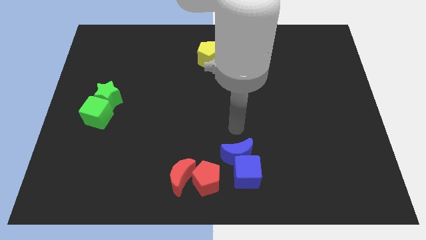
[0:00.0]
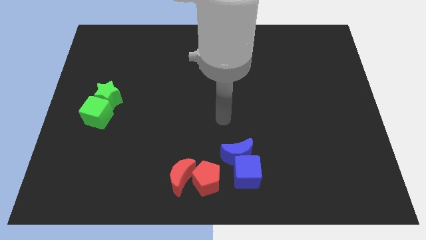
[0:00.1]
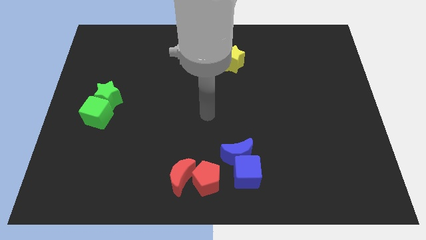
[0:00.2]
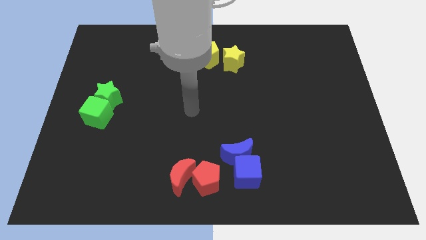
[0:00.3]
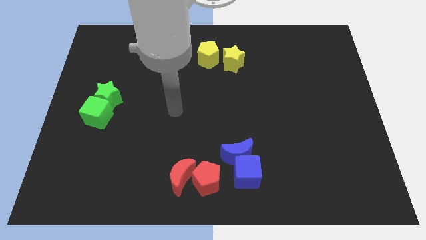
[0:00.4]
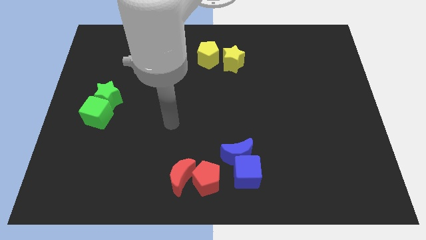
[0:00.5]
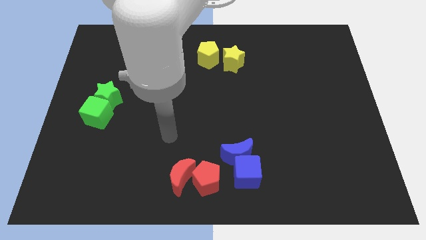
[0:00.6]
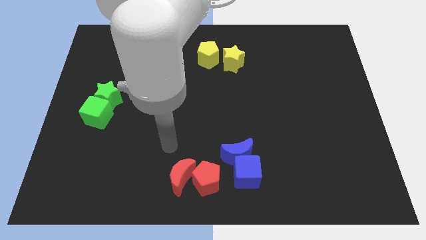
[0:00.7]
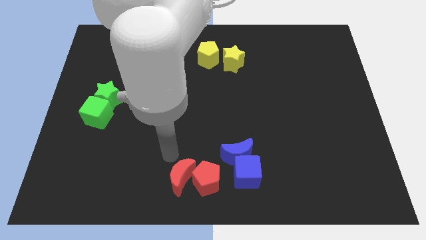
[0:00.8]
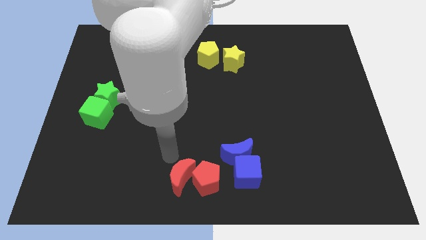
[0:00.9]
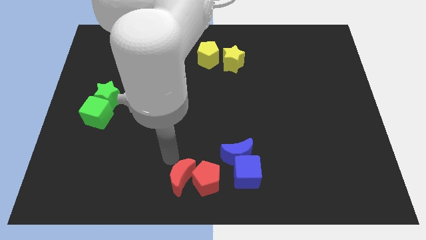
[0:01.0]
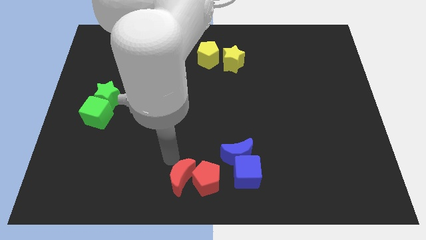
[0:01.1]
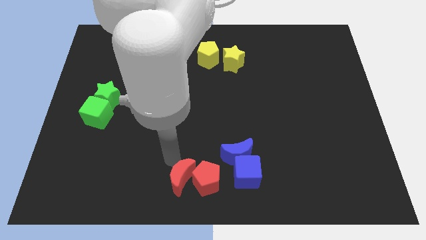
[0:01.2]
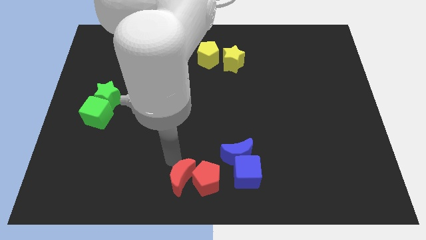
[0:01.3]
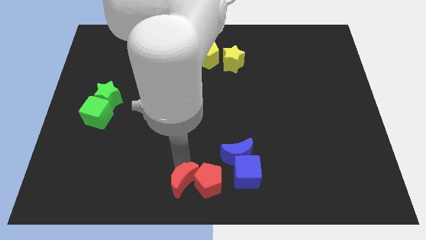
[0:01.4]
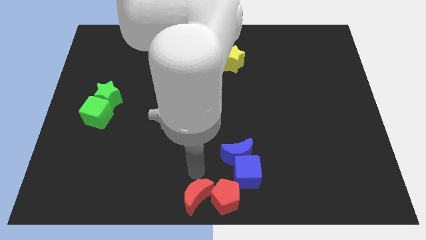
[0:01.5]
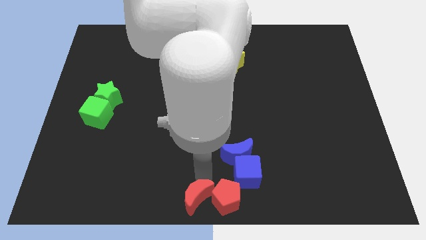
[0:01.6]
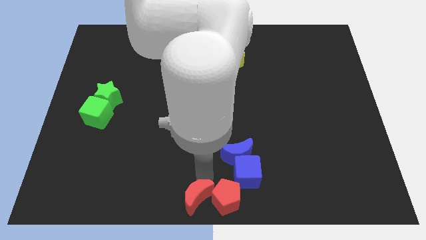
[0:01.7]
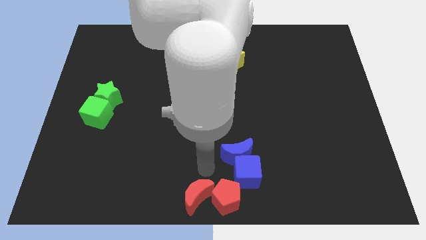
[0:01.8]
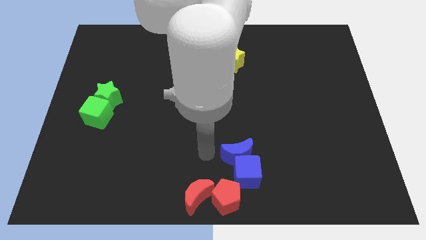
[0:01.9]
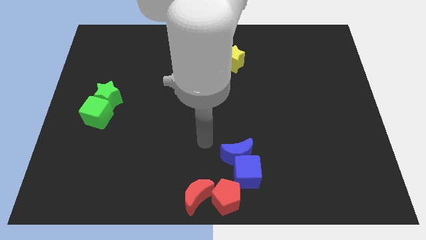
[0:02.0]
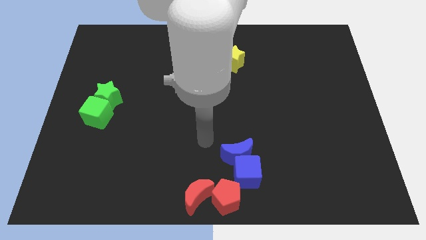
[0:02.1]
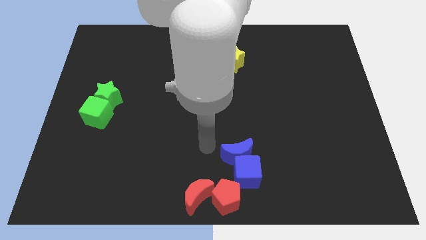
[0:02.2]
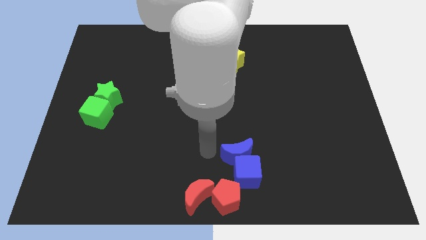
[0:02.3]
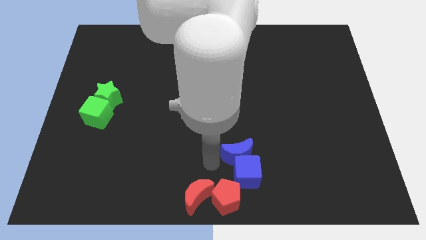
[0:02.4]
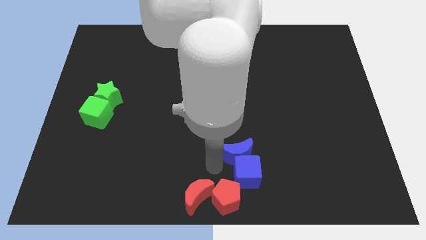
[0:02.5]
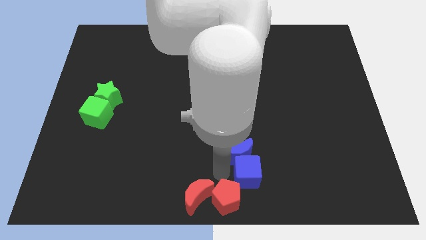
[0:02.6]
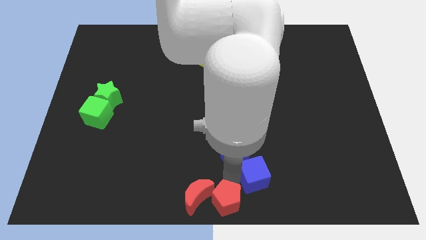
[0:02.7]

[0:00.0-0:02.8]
push red moon red pentagon to the bottom center

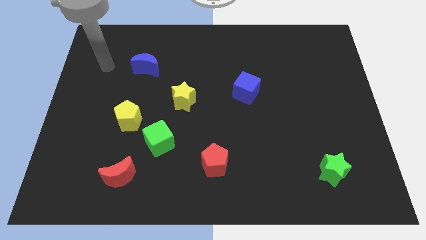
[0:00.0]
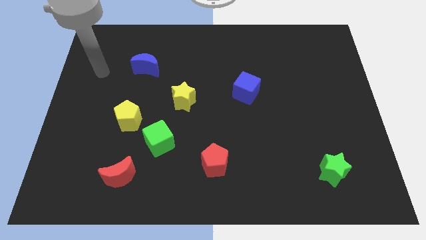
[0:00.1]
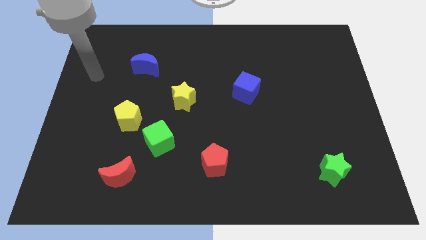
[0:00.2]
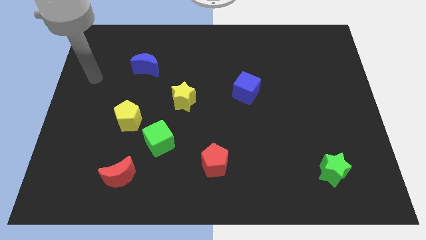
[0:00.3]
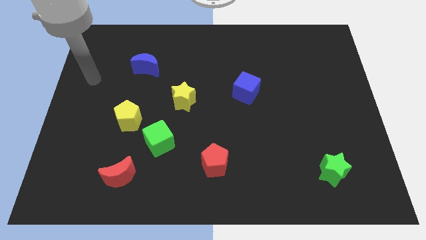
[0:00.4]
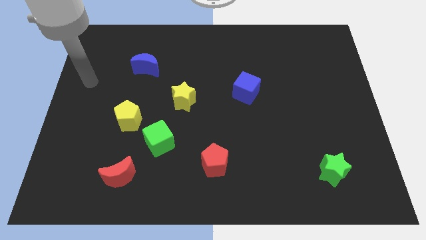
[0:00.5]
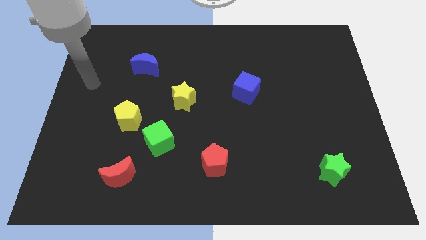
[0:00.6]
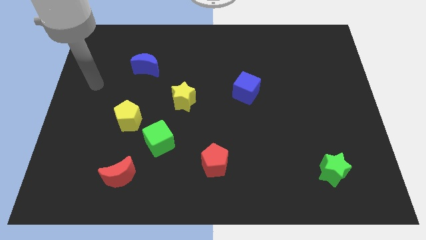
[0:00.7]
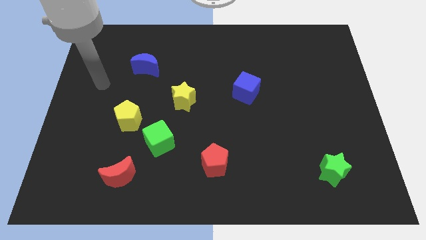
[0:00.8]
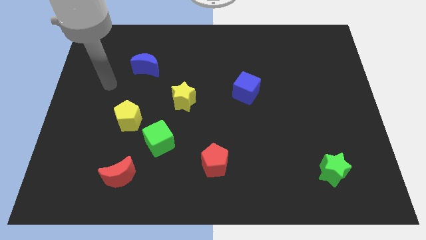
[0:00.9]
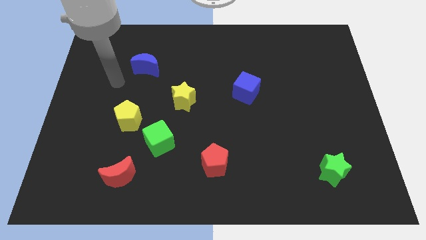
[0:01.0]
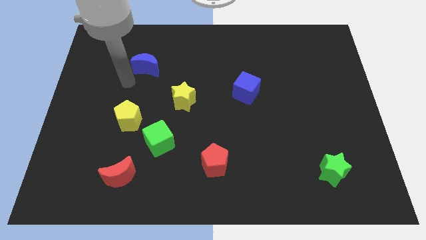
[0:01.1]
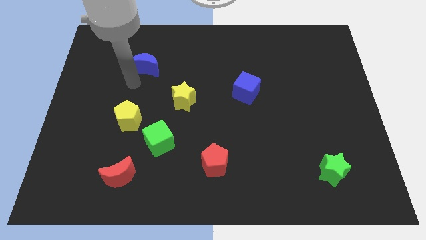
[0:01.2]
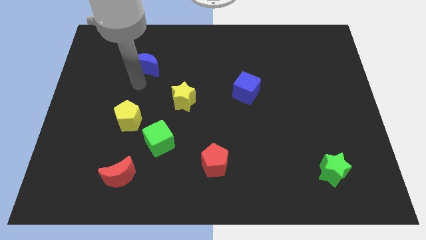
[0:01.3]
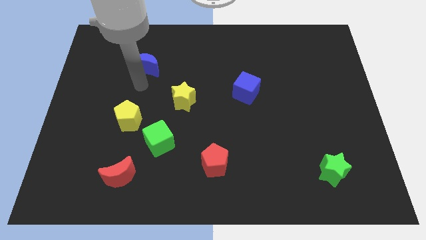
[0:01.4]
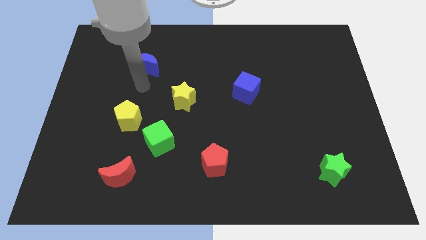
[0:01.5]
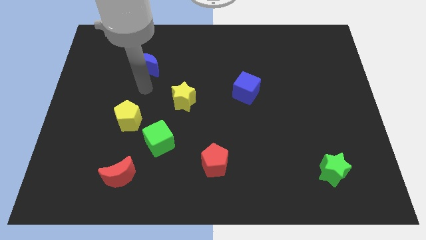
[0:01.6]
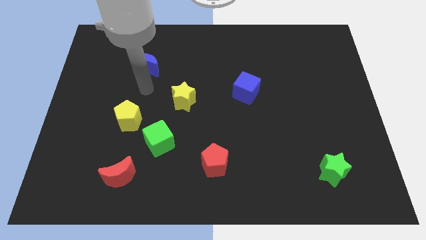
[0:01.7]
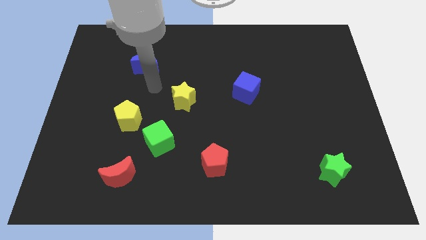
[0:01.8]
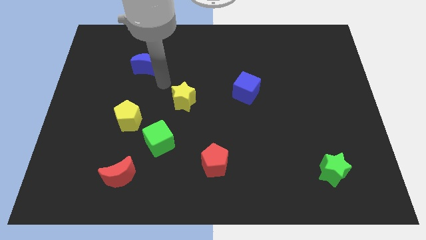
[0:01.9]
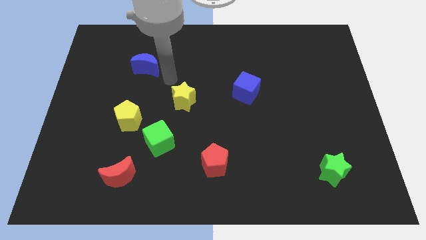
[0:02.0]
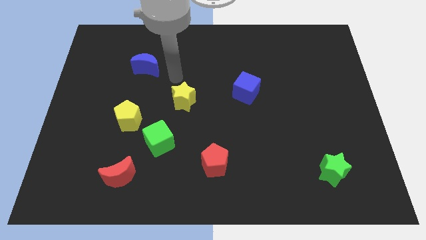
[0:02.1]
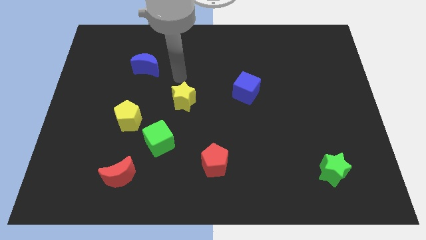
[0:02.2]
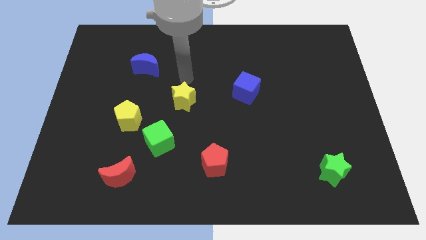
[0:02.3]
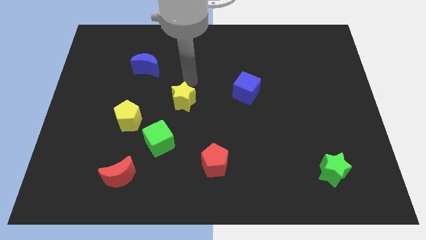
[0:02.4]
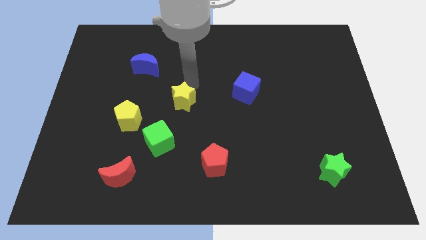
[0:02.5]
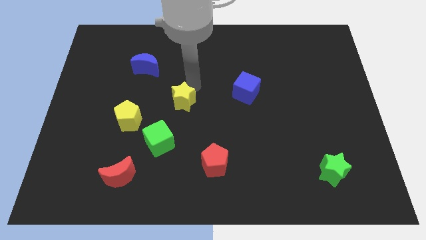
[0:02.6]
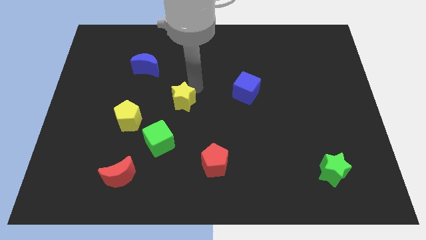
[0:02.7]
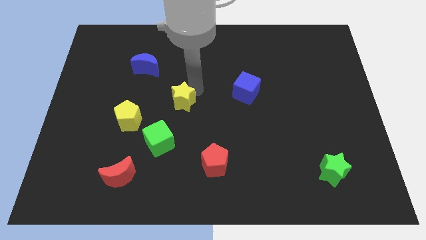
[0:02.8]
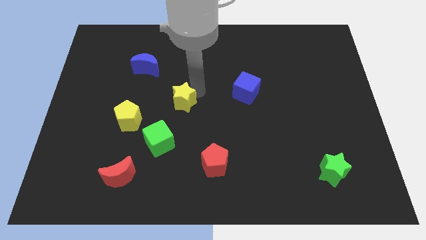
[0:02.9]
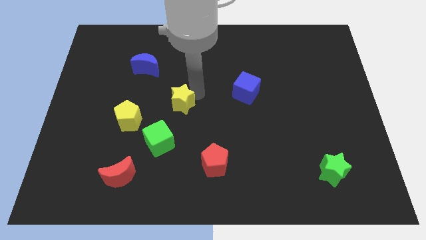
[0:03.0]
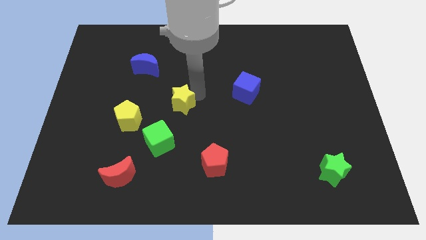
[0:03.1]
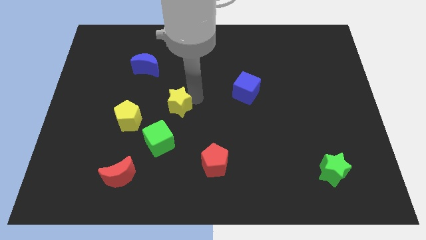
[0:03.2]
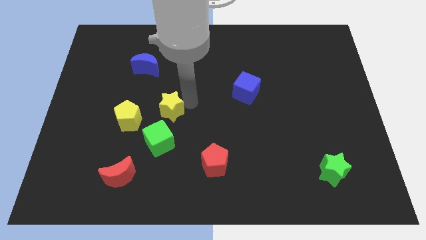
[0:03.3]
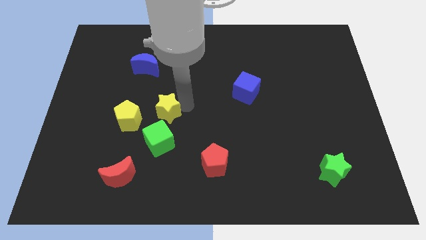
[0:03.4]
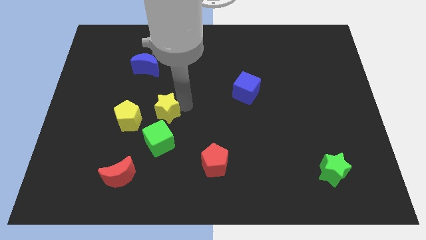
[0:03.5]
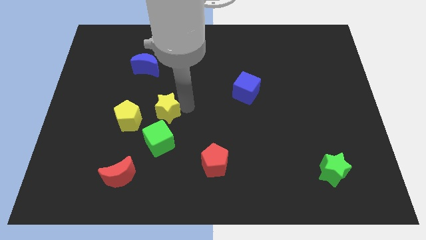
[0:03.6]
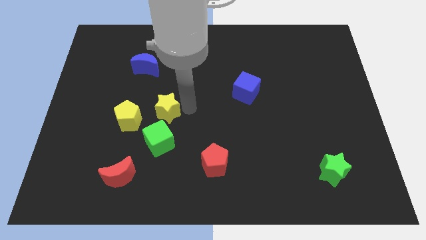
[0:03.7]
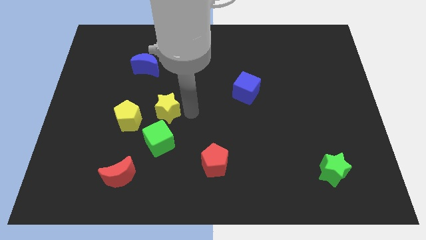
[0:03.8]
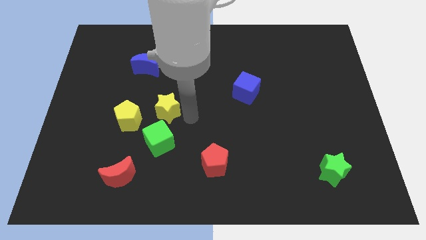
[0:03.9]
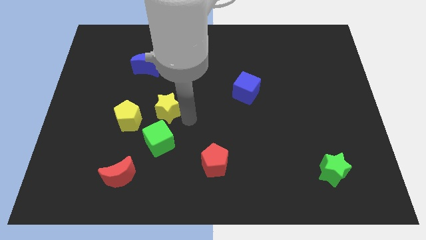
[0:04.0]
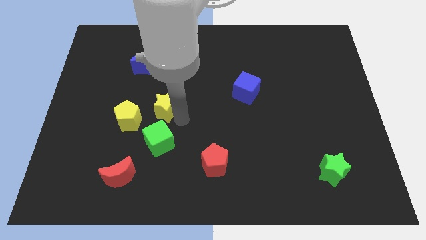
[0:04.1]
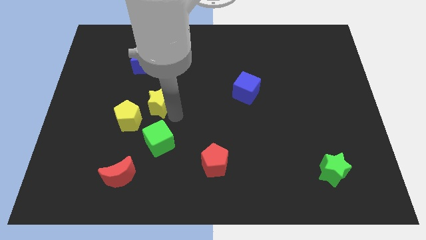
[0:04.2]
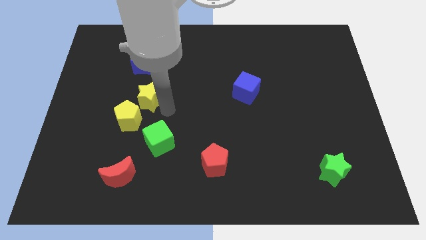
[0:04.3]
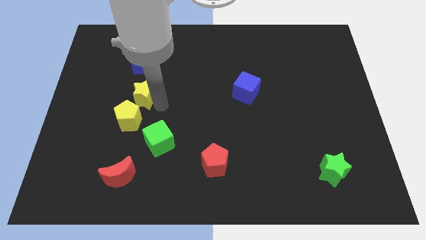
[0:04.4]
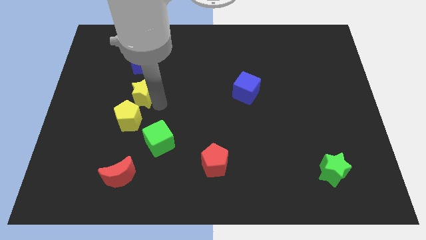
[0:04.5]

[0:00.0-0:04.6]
move the yellow star towards the left side

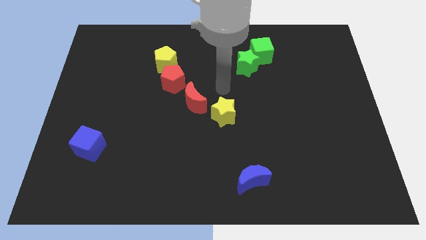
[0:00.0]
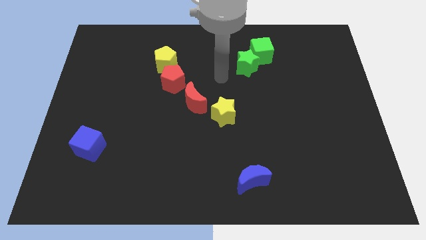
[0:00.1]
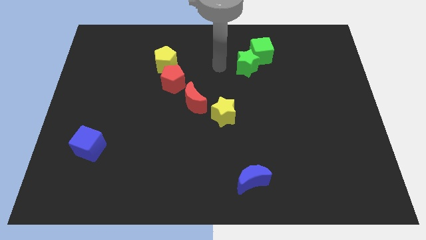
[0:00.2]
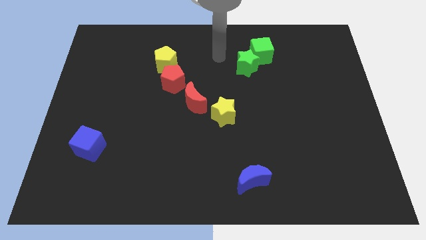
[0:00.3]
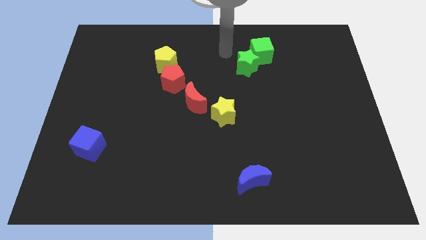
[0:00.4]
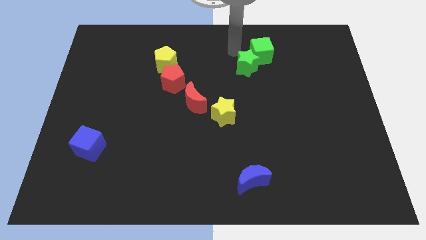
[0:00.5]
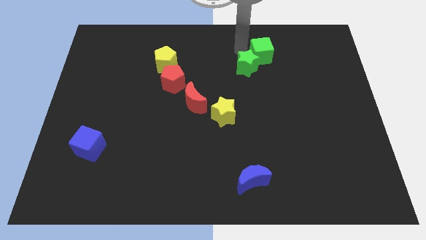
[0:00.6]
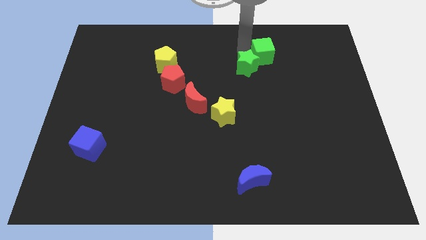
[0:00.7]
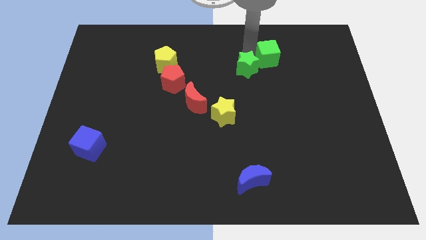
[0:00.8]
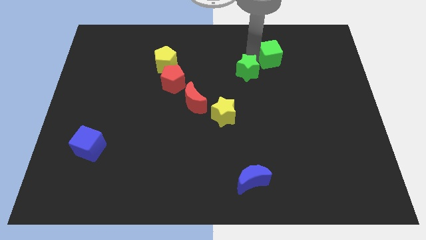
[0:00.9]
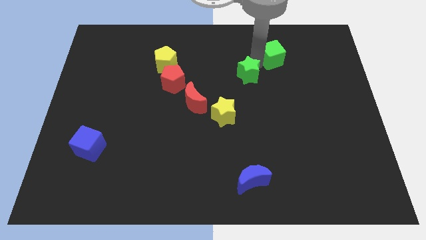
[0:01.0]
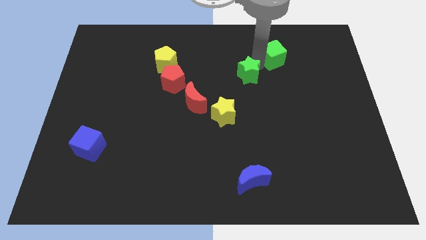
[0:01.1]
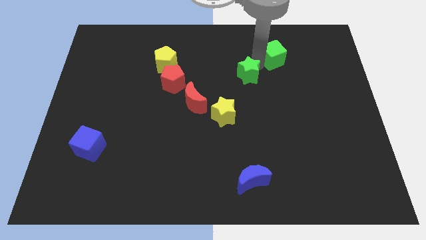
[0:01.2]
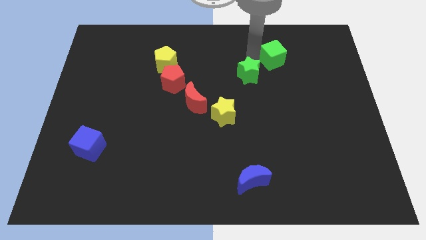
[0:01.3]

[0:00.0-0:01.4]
place your arm to the top side of the green star

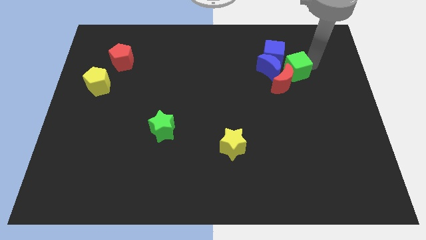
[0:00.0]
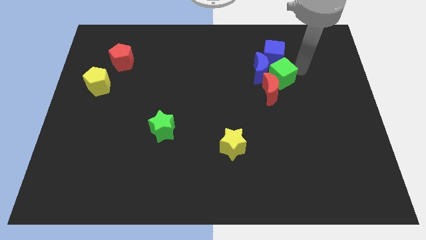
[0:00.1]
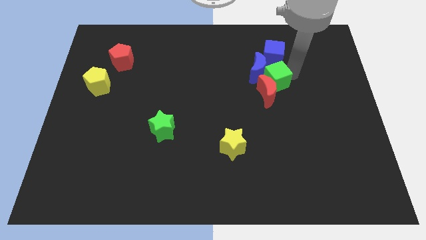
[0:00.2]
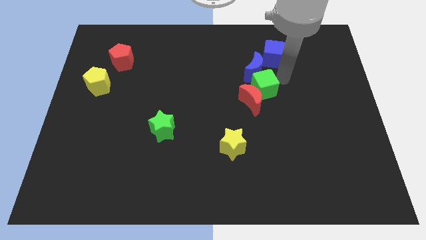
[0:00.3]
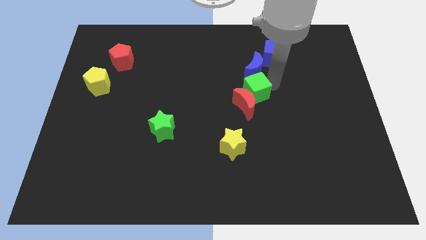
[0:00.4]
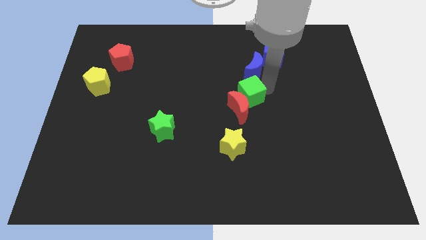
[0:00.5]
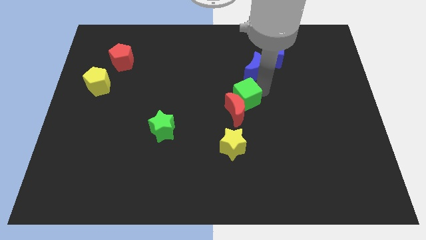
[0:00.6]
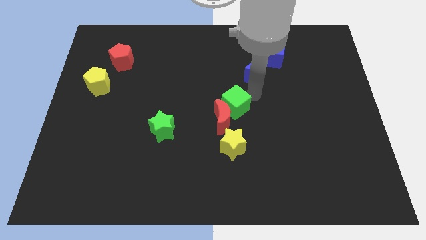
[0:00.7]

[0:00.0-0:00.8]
push the green cube and red moon together above the yellow star
